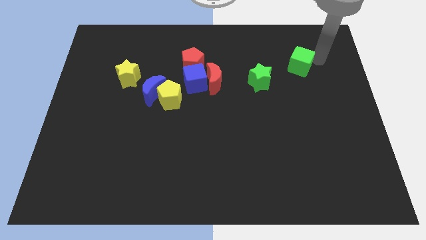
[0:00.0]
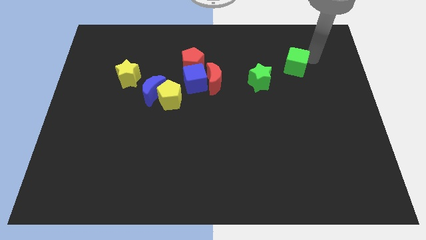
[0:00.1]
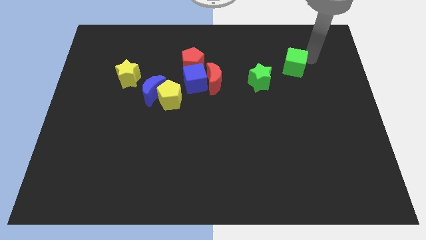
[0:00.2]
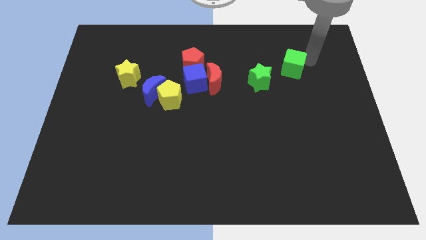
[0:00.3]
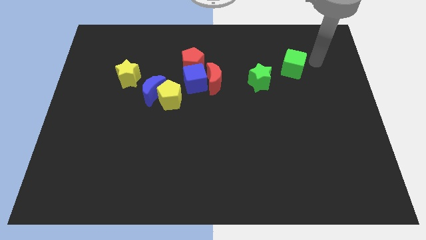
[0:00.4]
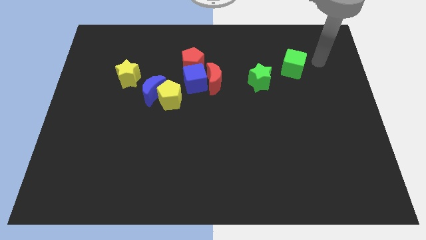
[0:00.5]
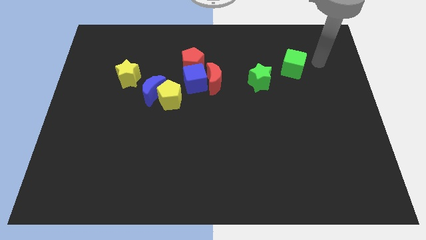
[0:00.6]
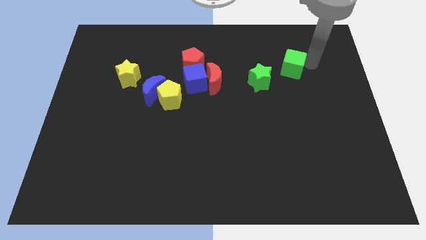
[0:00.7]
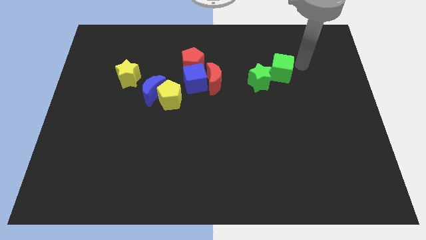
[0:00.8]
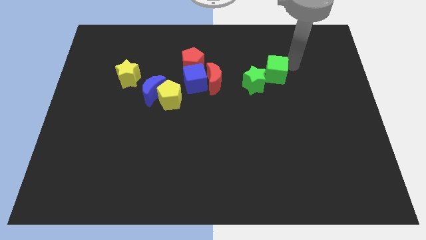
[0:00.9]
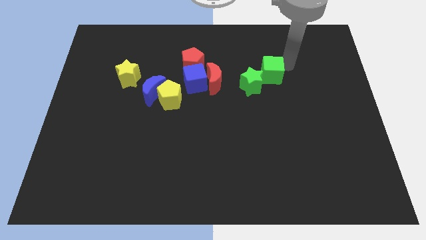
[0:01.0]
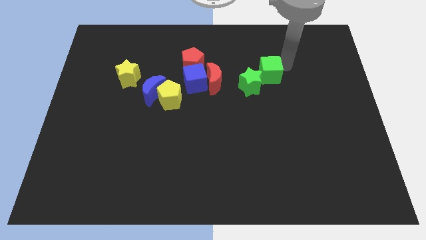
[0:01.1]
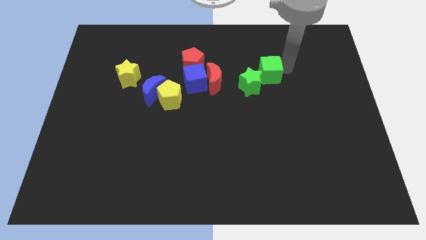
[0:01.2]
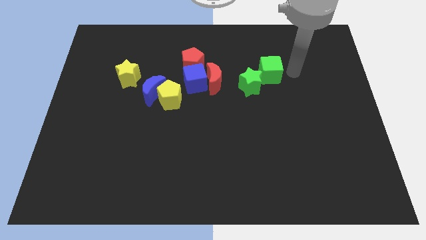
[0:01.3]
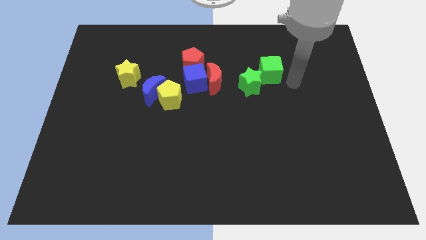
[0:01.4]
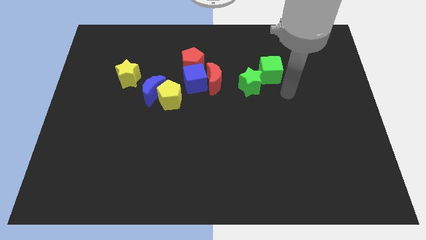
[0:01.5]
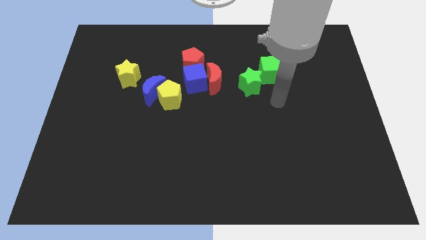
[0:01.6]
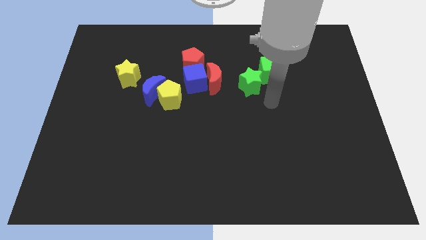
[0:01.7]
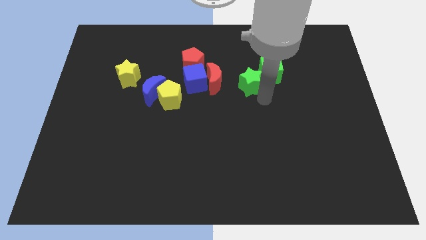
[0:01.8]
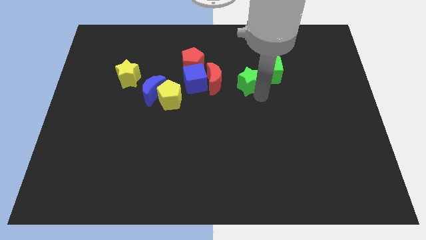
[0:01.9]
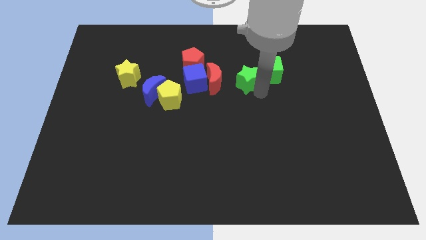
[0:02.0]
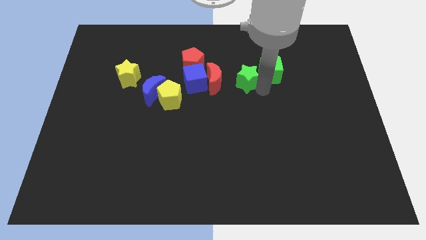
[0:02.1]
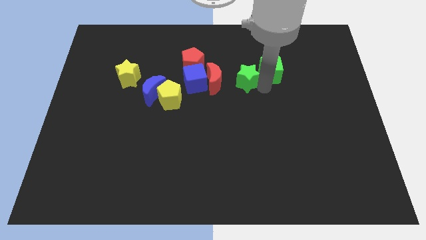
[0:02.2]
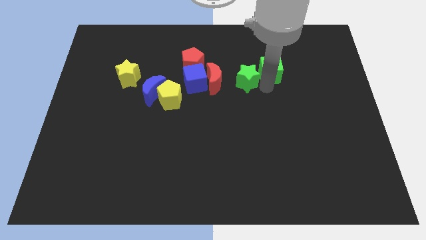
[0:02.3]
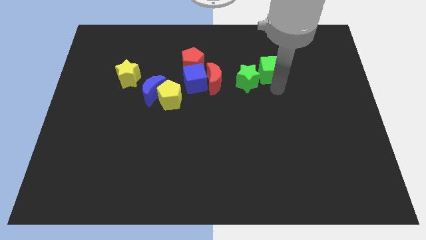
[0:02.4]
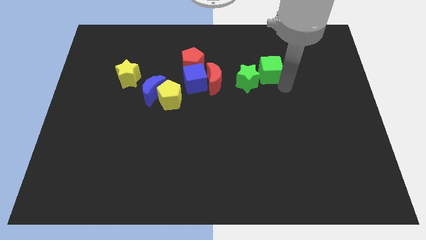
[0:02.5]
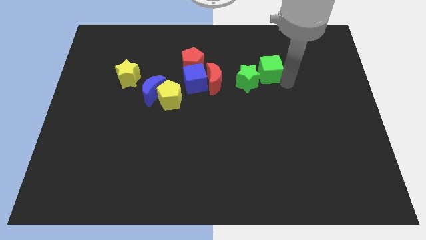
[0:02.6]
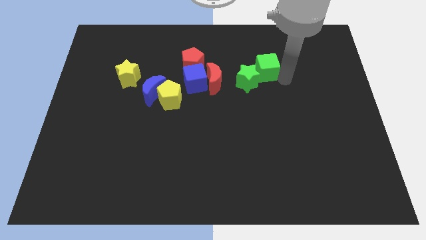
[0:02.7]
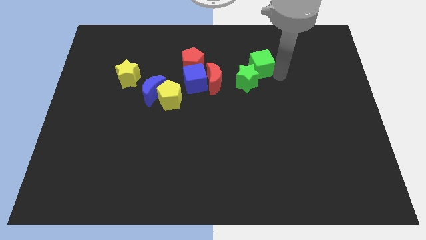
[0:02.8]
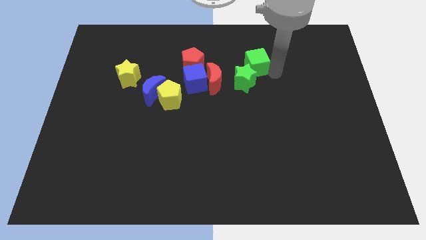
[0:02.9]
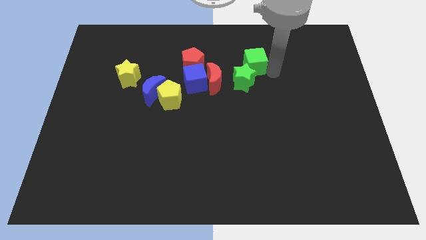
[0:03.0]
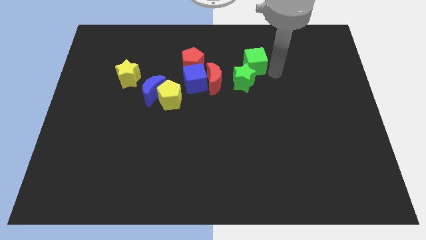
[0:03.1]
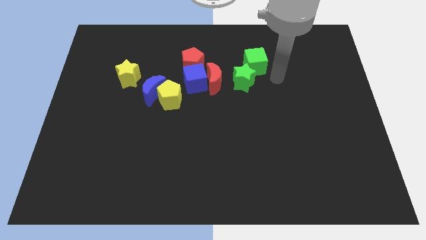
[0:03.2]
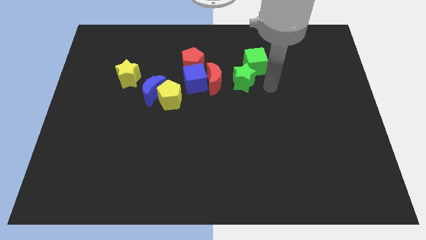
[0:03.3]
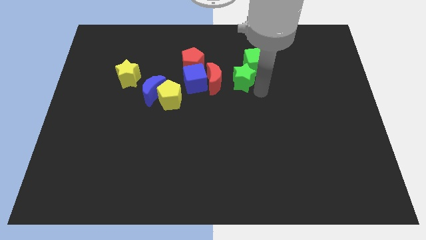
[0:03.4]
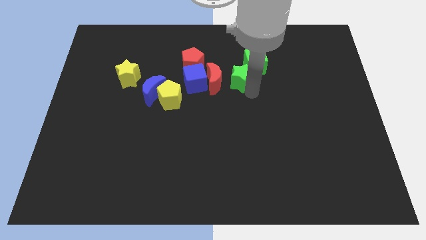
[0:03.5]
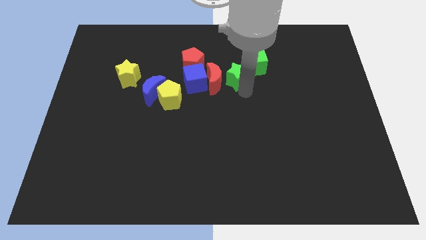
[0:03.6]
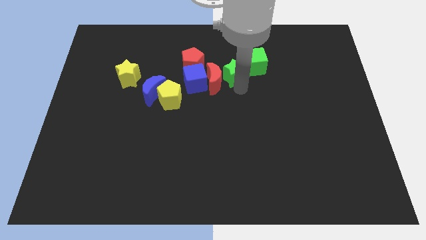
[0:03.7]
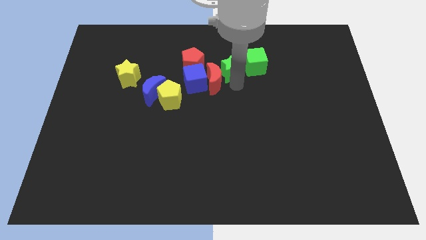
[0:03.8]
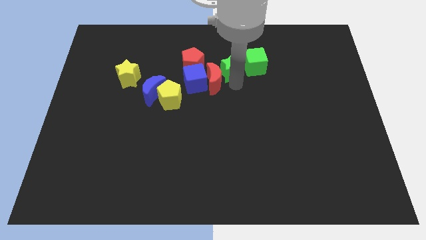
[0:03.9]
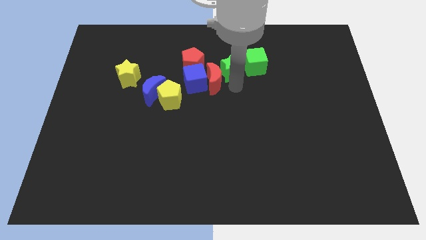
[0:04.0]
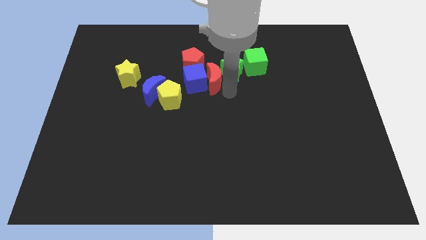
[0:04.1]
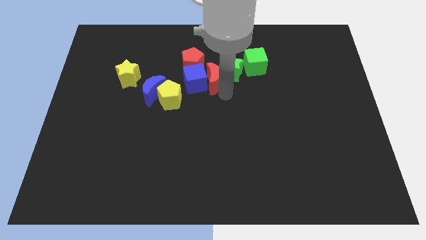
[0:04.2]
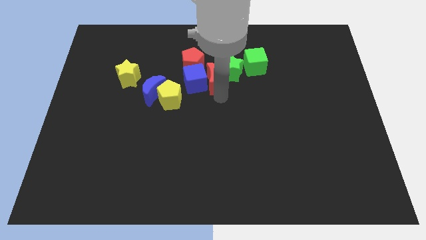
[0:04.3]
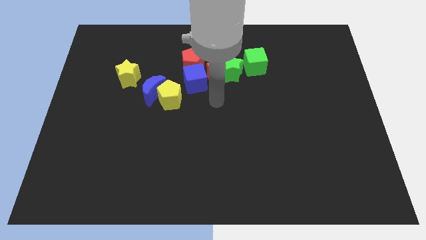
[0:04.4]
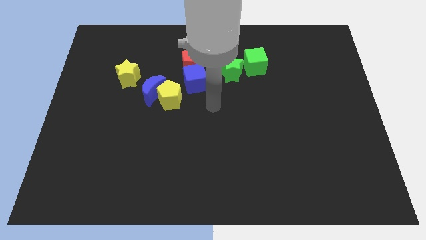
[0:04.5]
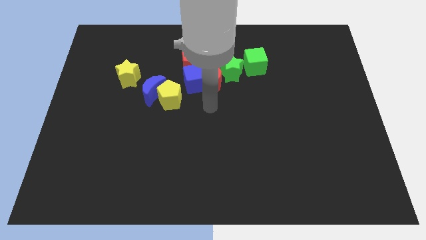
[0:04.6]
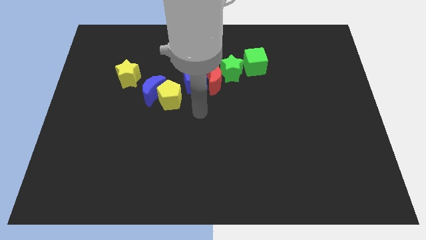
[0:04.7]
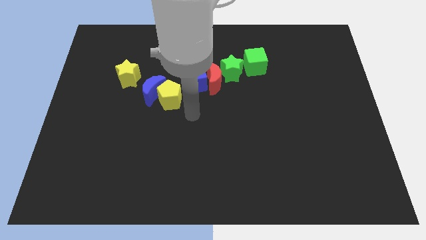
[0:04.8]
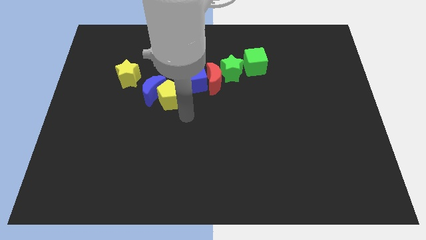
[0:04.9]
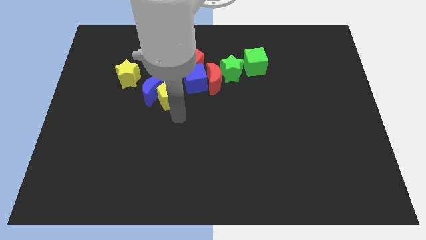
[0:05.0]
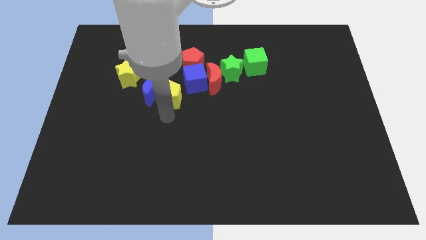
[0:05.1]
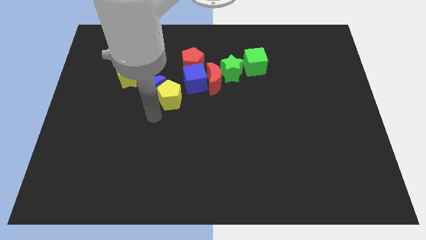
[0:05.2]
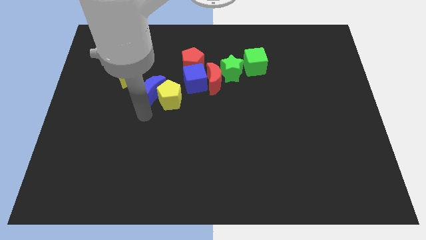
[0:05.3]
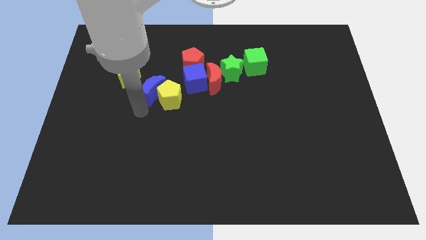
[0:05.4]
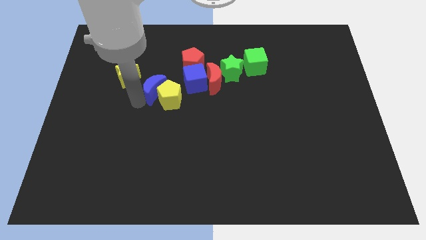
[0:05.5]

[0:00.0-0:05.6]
move the green cube close to green star

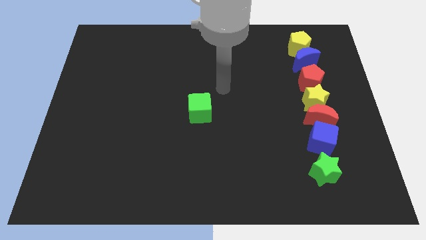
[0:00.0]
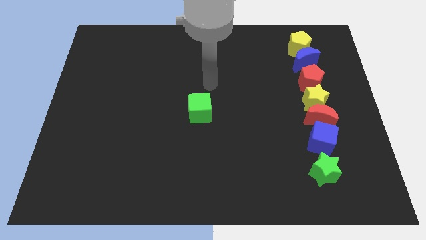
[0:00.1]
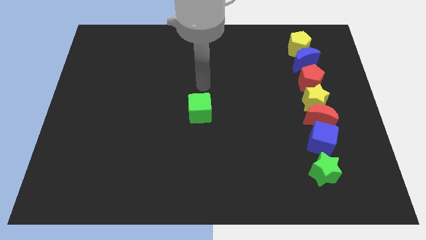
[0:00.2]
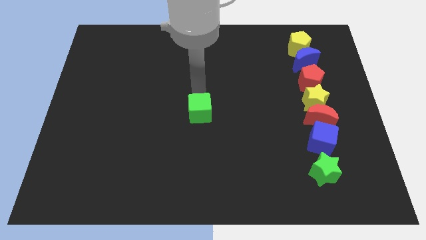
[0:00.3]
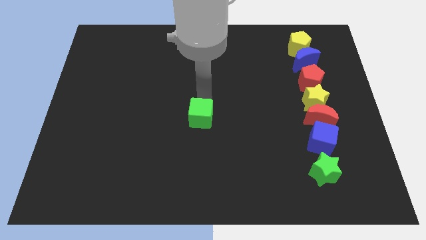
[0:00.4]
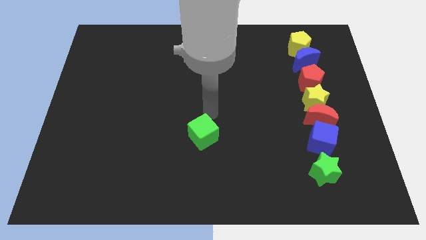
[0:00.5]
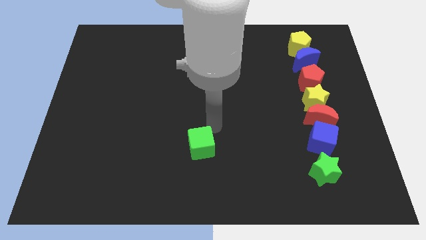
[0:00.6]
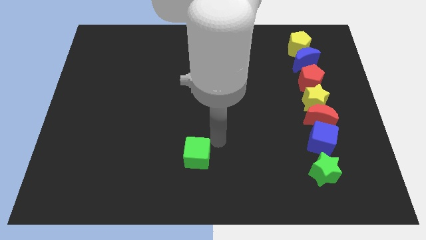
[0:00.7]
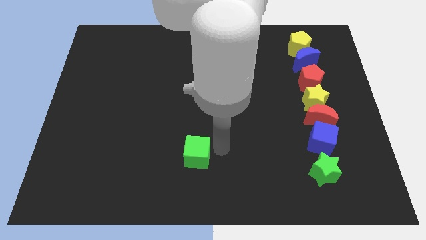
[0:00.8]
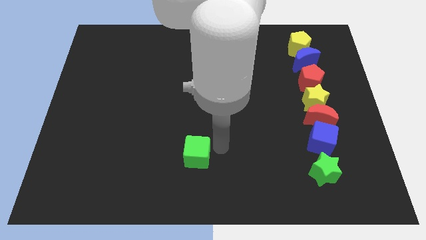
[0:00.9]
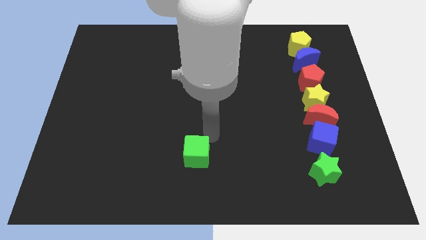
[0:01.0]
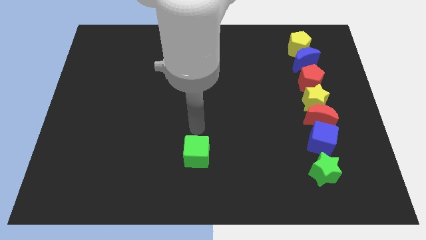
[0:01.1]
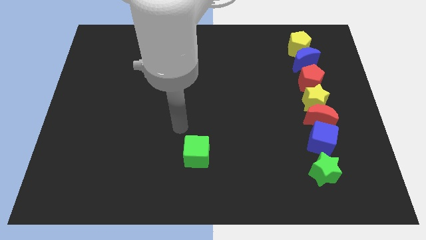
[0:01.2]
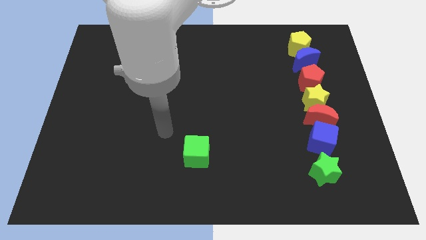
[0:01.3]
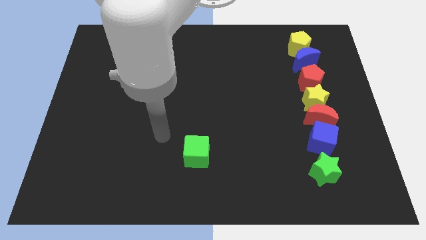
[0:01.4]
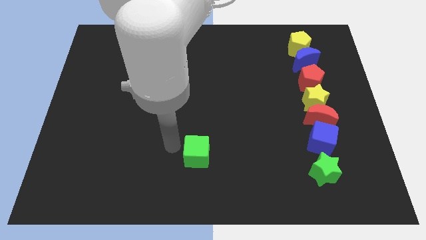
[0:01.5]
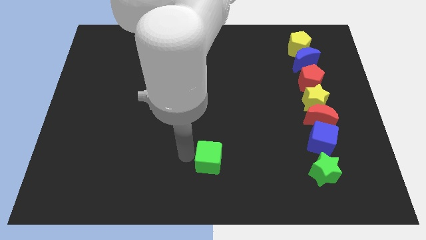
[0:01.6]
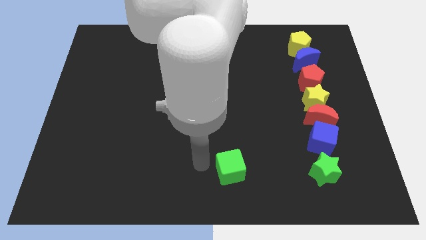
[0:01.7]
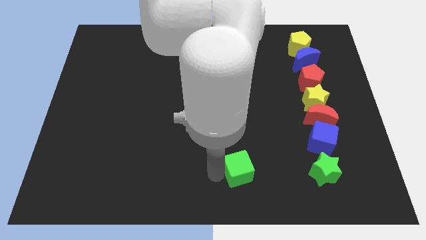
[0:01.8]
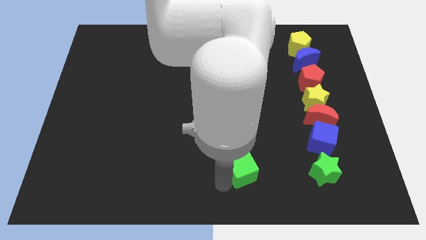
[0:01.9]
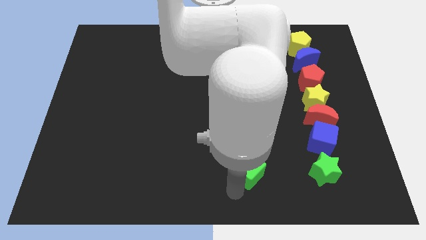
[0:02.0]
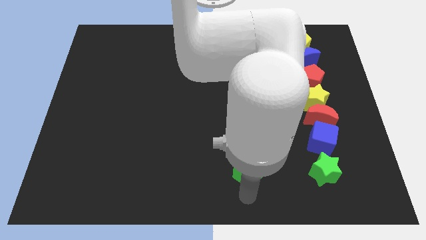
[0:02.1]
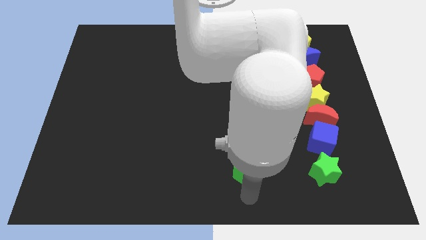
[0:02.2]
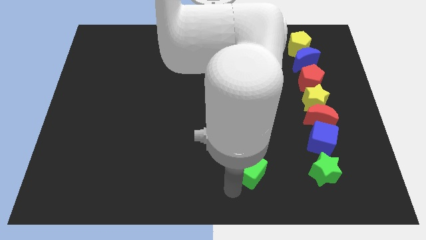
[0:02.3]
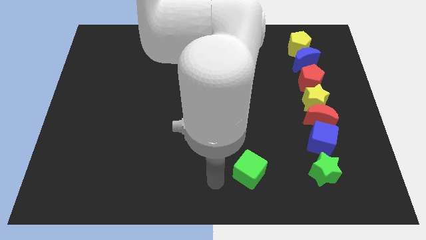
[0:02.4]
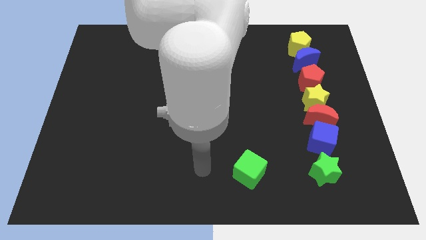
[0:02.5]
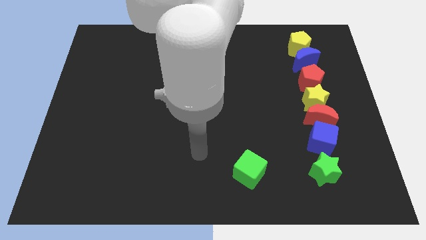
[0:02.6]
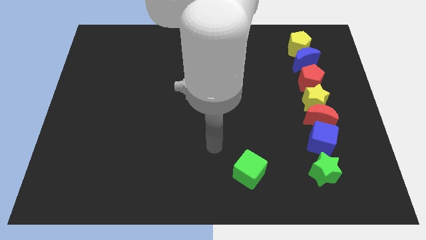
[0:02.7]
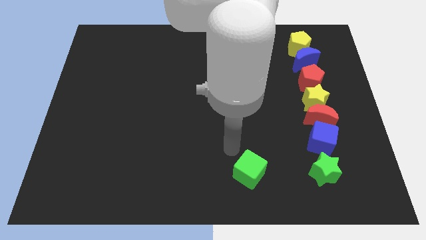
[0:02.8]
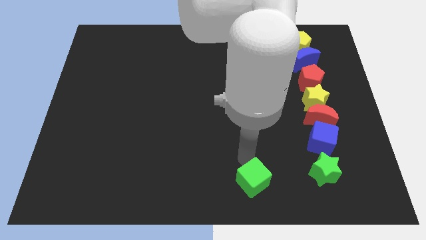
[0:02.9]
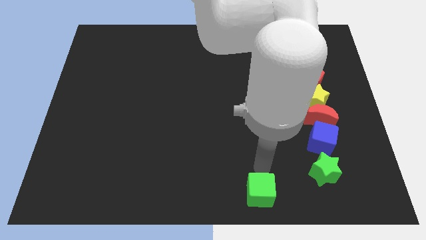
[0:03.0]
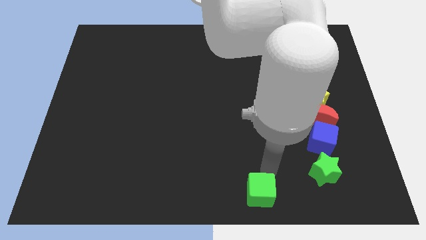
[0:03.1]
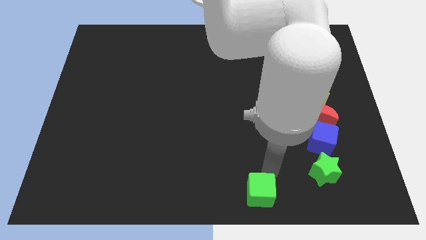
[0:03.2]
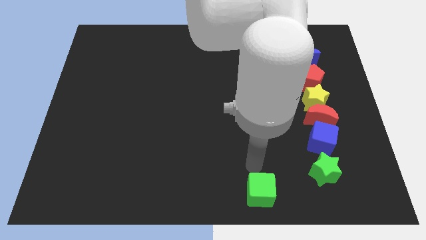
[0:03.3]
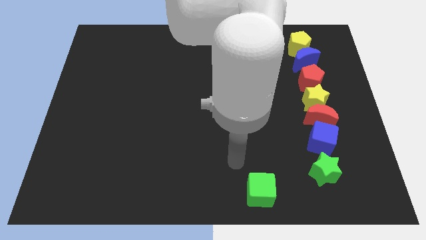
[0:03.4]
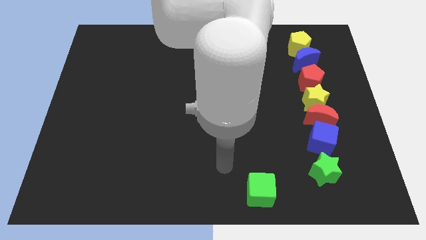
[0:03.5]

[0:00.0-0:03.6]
move the green cube towards the bottom of the board
